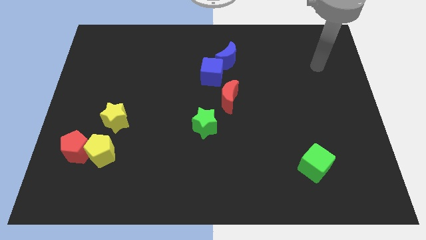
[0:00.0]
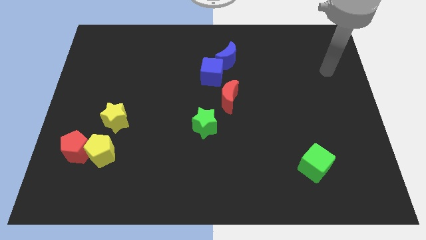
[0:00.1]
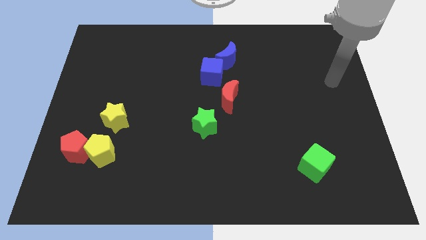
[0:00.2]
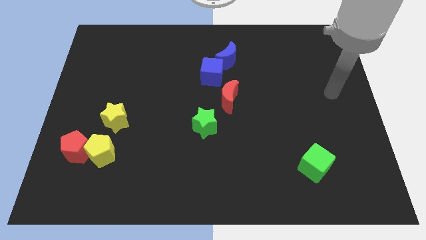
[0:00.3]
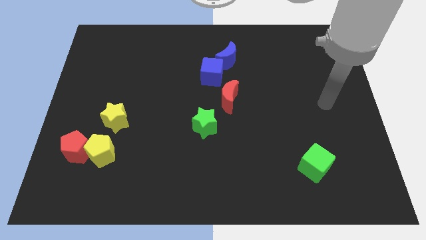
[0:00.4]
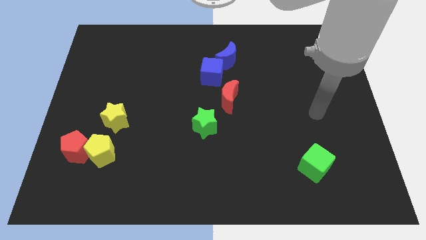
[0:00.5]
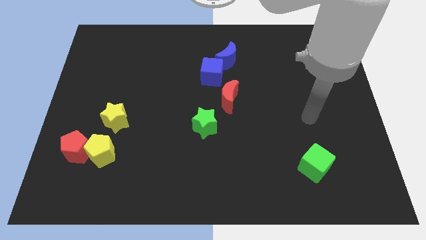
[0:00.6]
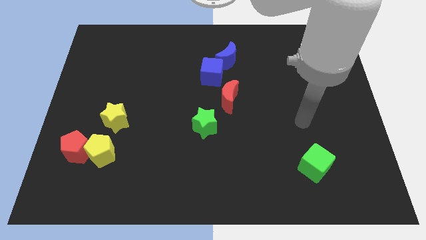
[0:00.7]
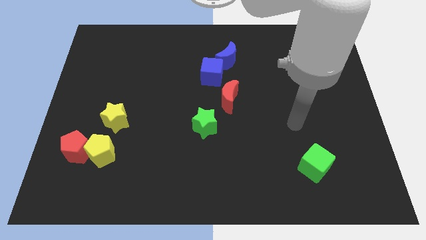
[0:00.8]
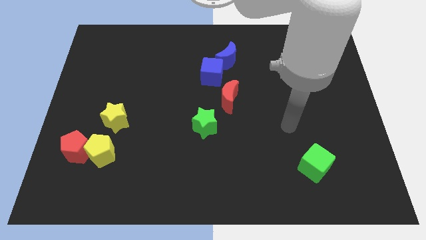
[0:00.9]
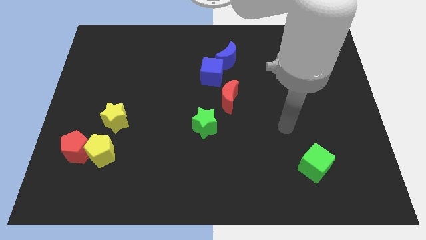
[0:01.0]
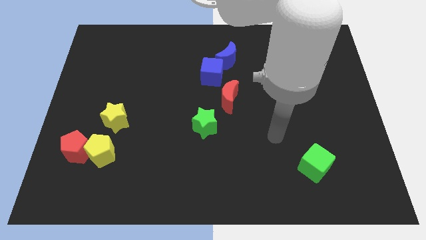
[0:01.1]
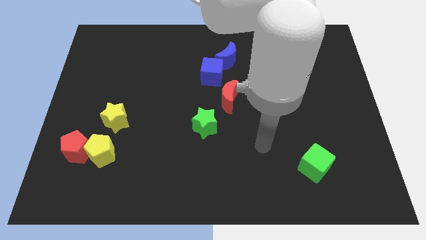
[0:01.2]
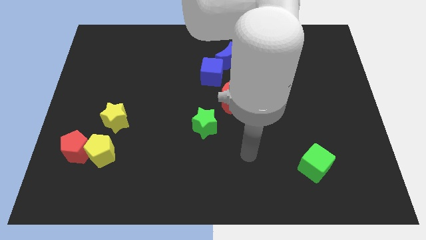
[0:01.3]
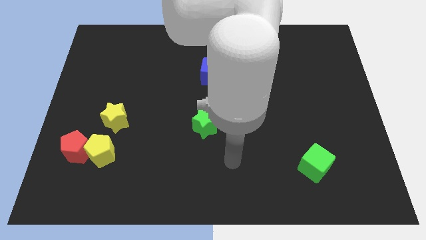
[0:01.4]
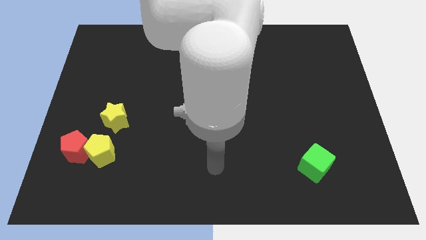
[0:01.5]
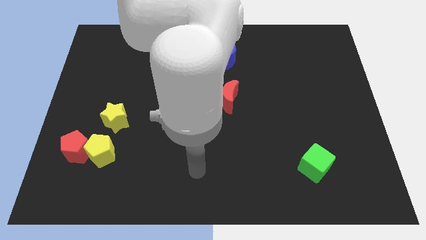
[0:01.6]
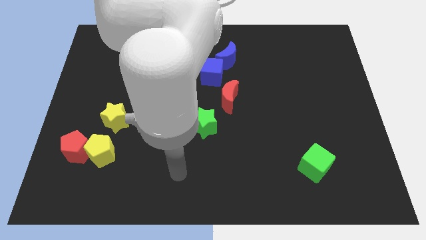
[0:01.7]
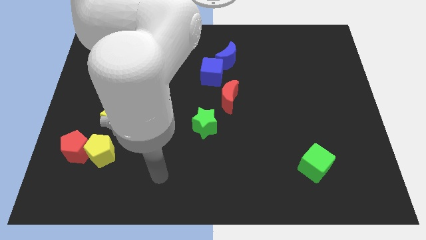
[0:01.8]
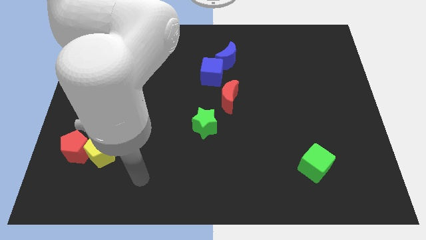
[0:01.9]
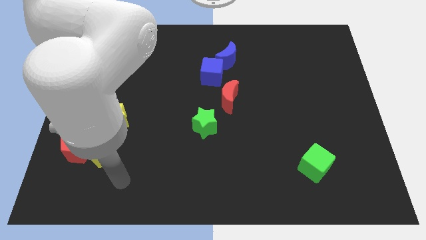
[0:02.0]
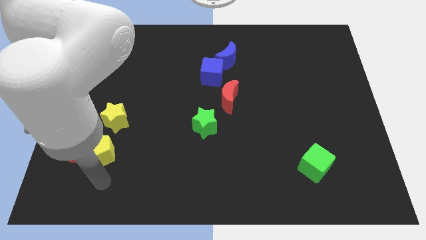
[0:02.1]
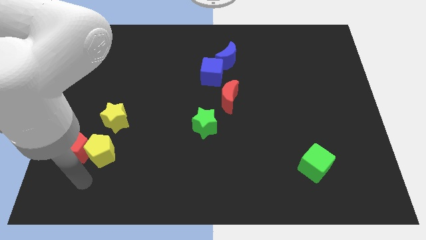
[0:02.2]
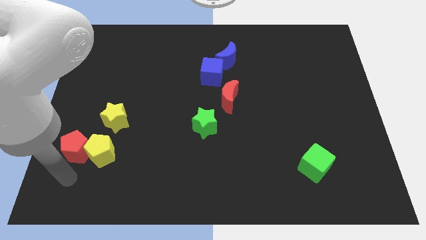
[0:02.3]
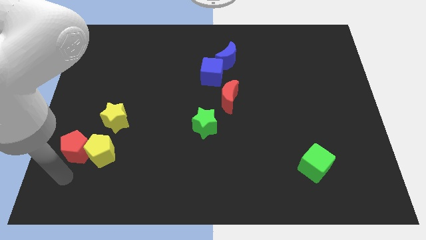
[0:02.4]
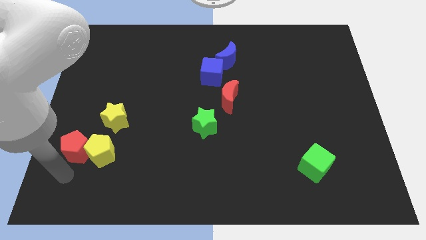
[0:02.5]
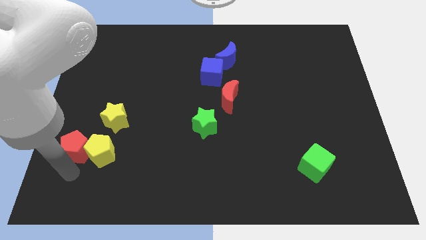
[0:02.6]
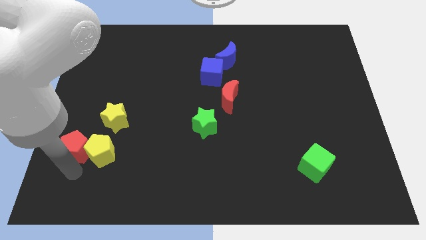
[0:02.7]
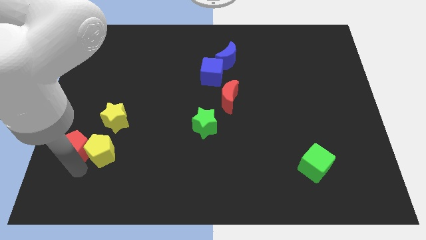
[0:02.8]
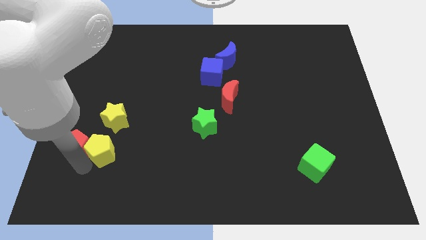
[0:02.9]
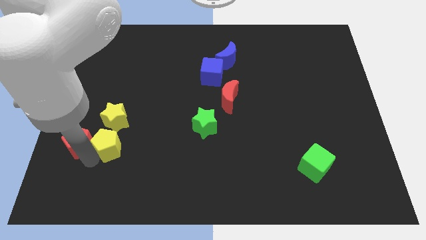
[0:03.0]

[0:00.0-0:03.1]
push the yellow pentagon up slightly

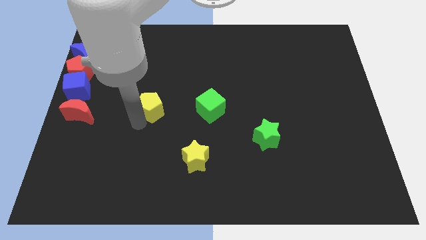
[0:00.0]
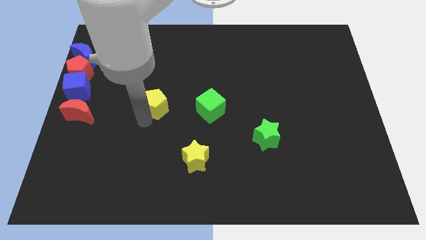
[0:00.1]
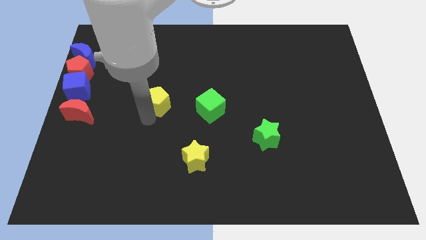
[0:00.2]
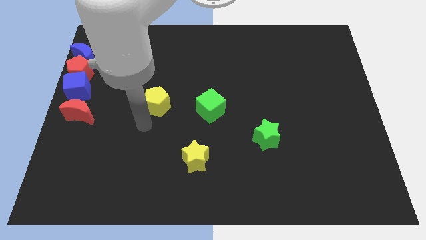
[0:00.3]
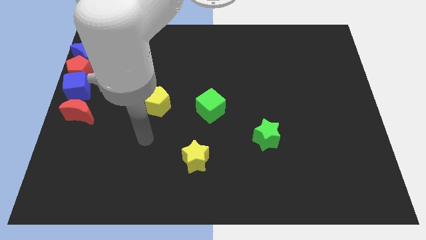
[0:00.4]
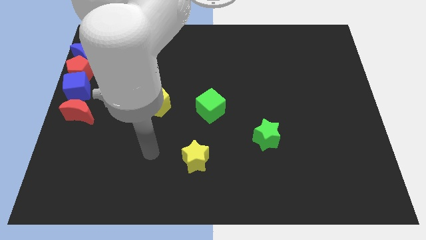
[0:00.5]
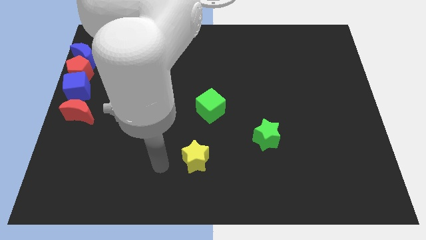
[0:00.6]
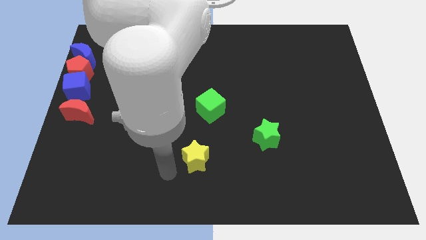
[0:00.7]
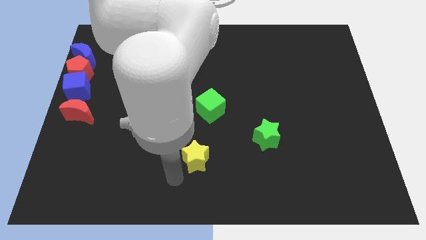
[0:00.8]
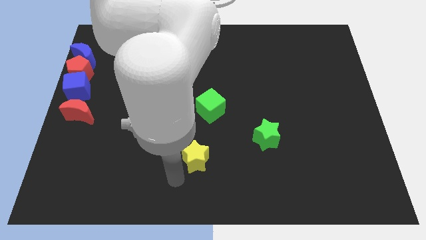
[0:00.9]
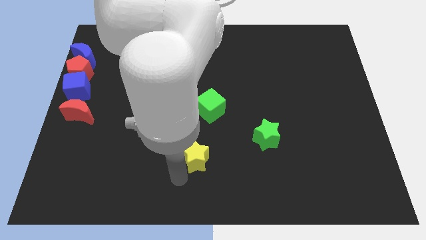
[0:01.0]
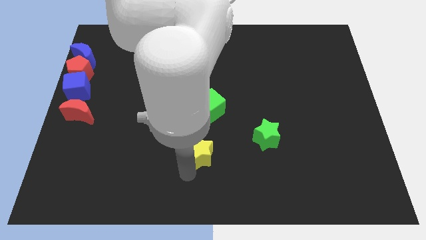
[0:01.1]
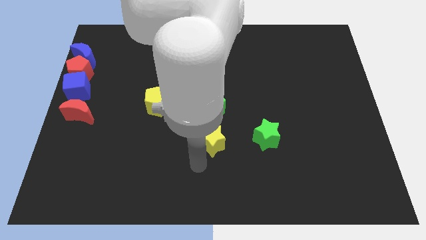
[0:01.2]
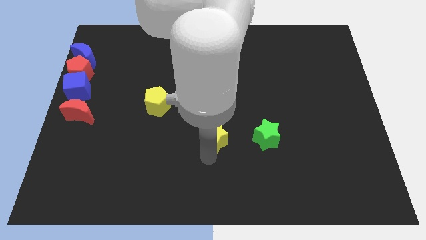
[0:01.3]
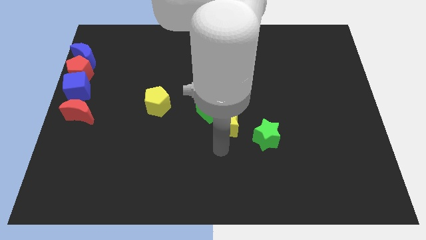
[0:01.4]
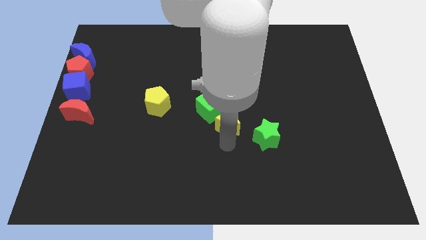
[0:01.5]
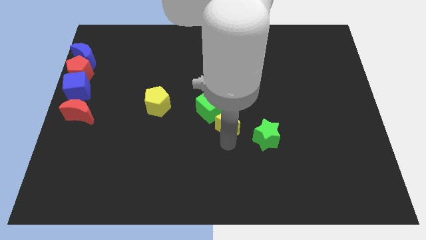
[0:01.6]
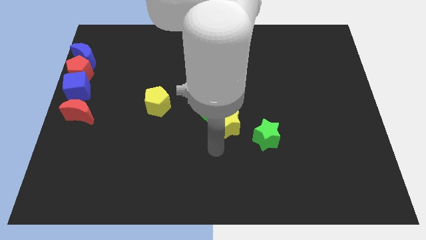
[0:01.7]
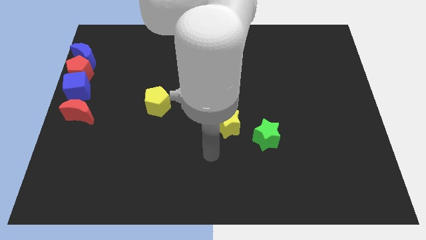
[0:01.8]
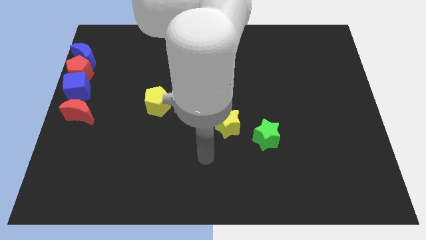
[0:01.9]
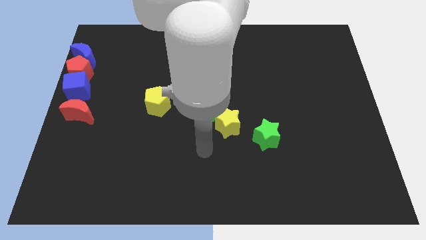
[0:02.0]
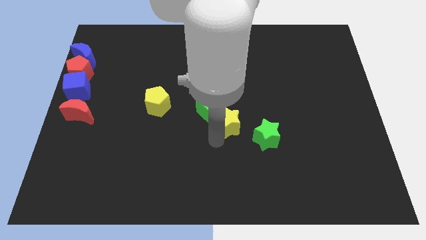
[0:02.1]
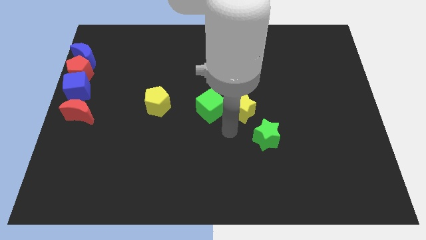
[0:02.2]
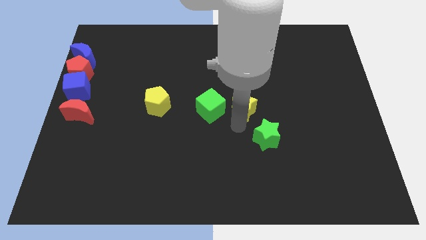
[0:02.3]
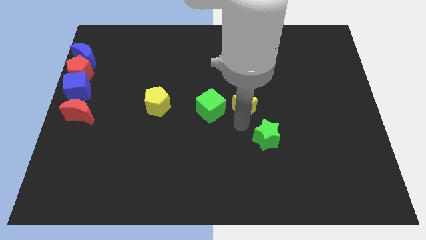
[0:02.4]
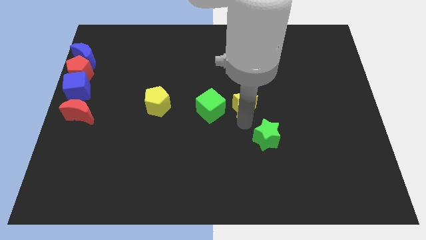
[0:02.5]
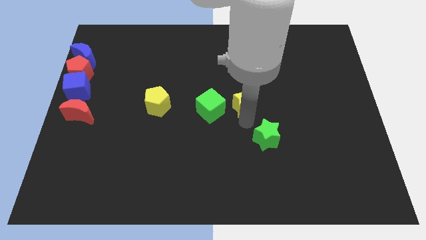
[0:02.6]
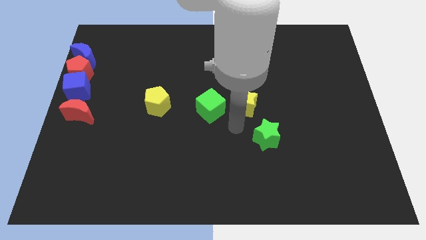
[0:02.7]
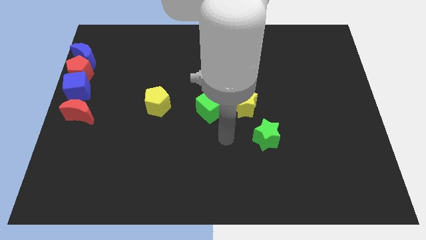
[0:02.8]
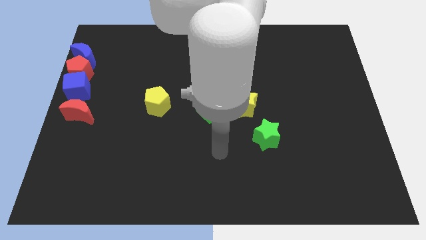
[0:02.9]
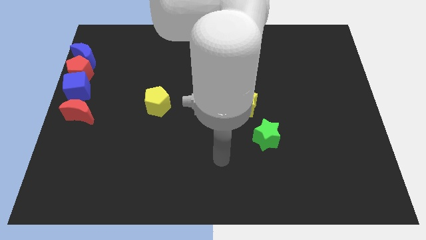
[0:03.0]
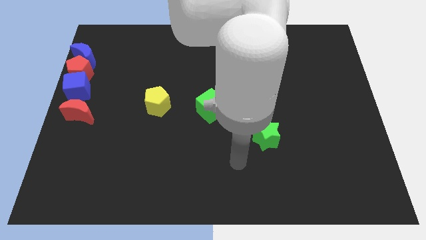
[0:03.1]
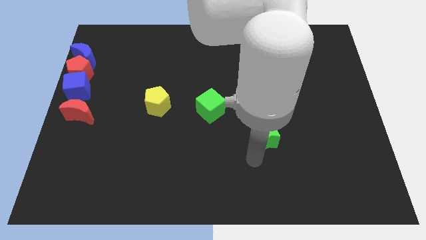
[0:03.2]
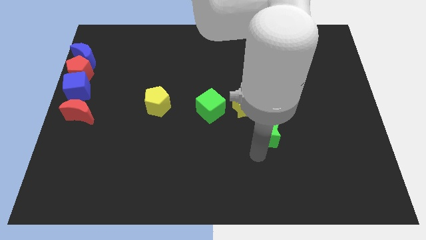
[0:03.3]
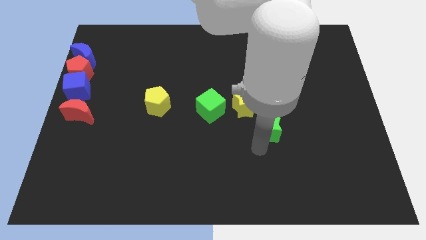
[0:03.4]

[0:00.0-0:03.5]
drag the yellow star horizontally to the right side of the green cube

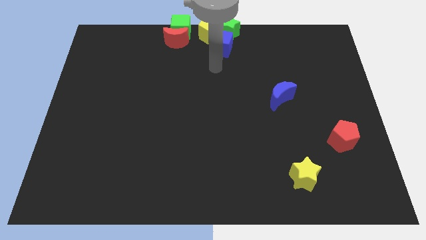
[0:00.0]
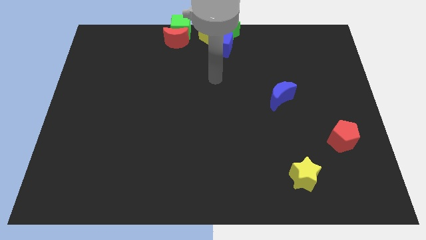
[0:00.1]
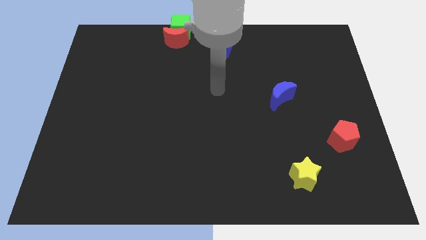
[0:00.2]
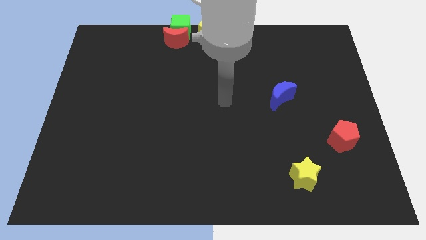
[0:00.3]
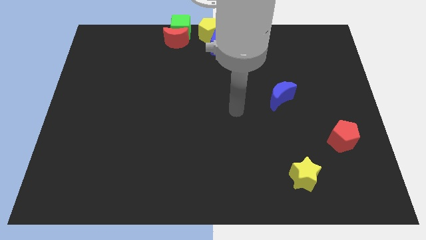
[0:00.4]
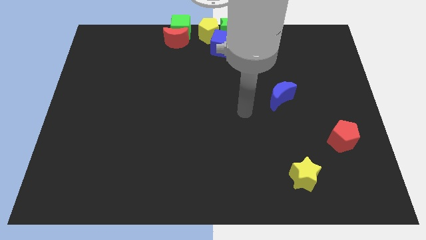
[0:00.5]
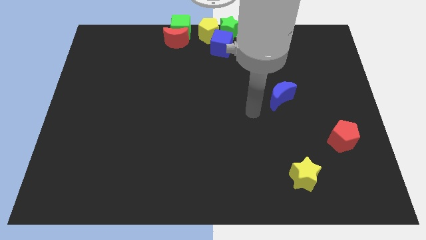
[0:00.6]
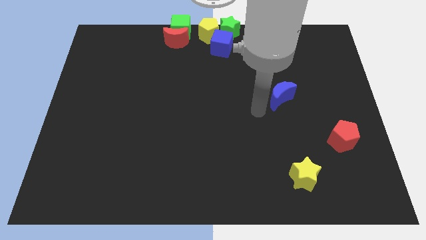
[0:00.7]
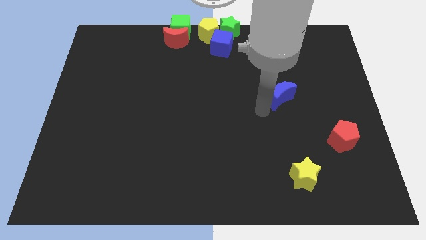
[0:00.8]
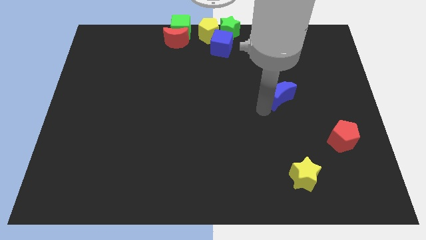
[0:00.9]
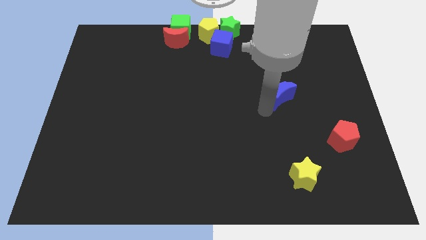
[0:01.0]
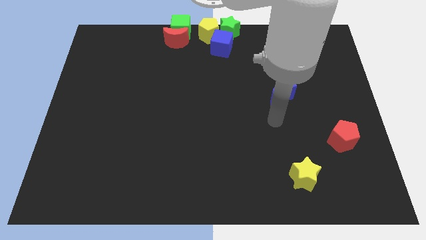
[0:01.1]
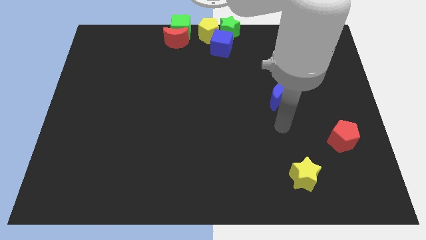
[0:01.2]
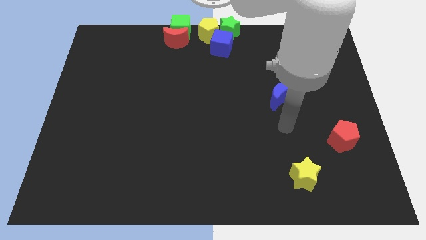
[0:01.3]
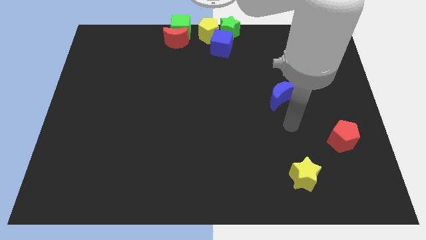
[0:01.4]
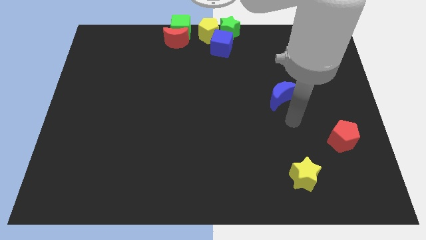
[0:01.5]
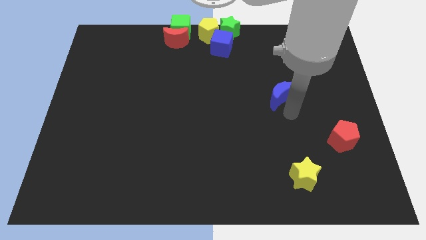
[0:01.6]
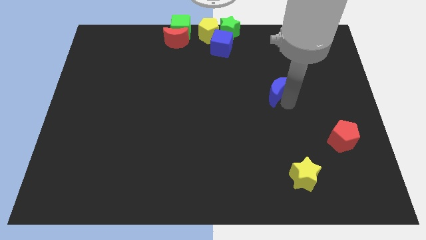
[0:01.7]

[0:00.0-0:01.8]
point your arm below blue moon

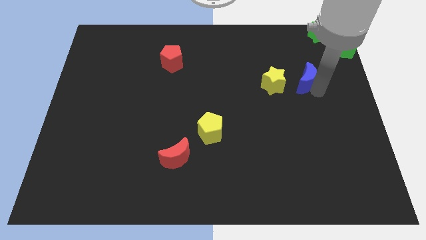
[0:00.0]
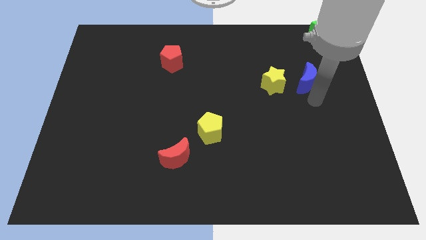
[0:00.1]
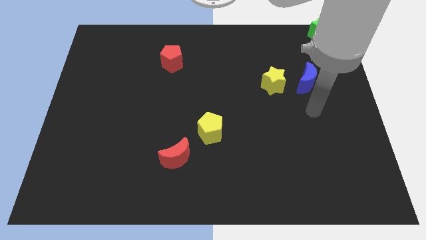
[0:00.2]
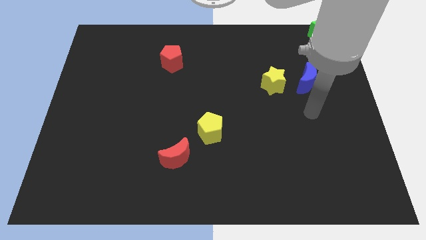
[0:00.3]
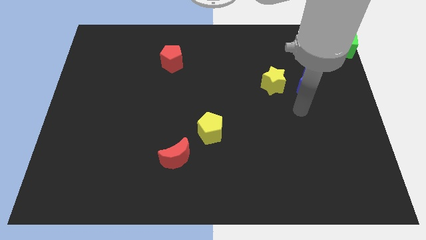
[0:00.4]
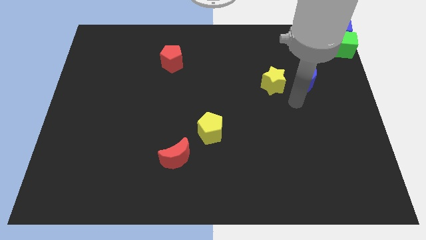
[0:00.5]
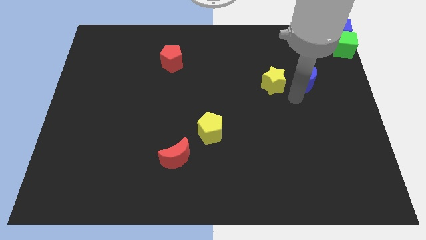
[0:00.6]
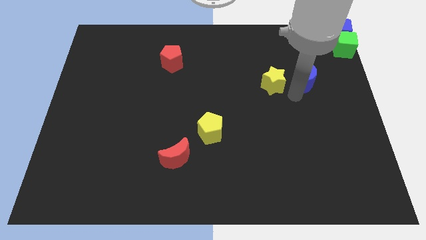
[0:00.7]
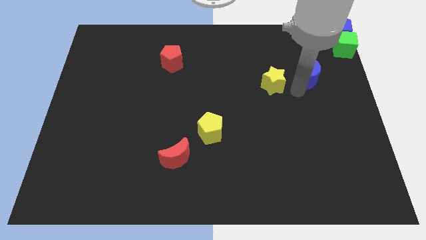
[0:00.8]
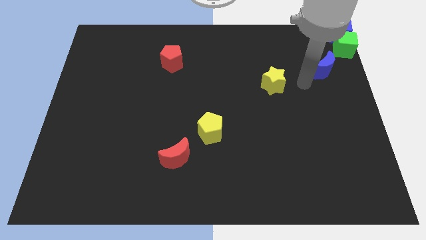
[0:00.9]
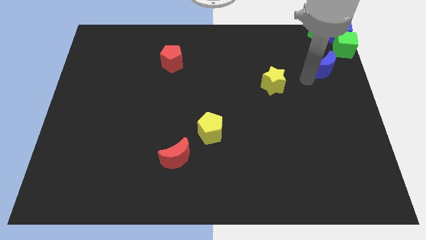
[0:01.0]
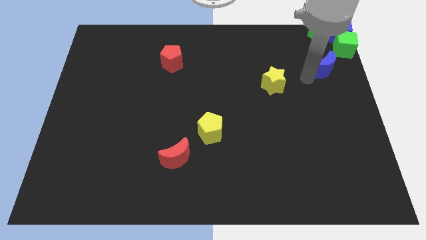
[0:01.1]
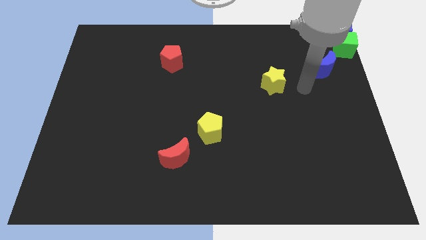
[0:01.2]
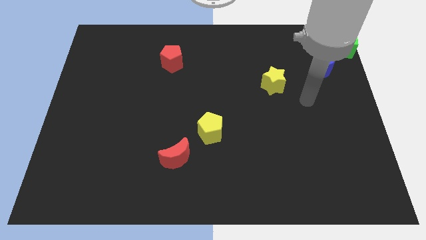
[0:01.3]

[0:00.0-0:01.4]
push the blue moon to the bottom left side of the green cube
